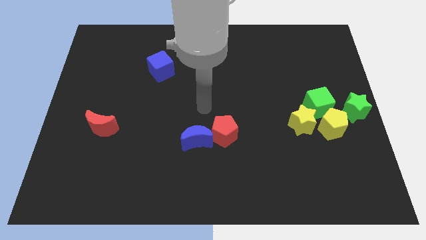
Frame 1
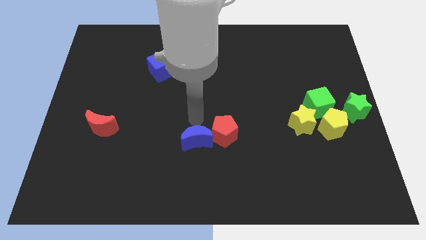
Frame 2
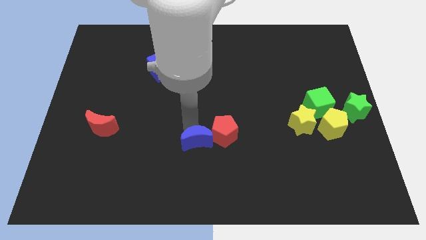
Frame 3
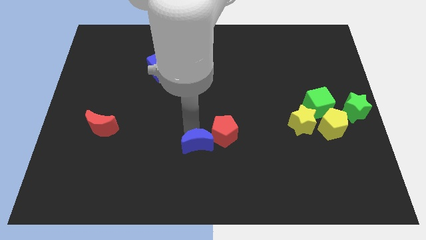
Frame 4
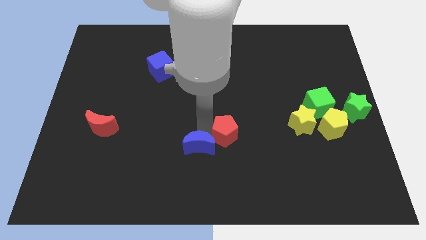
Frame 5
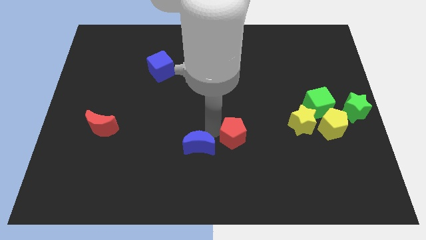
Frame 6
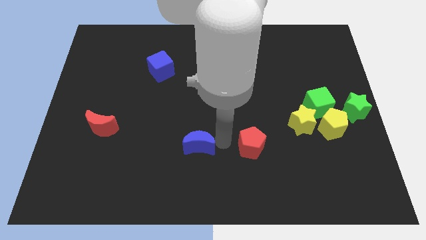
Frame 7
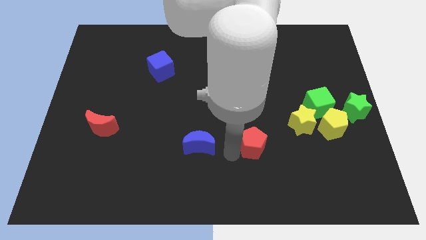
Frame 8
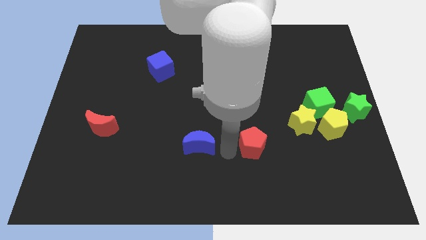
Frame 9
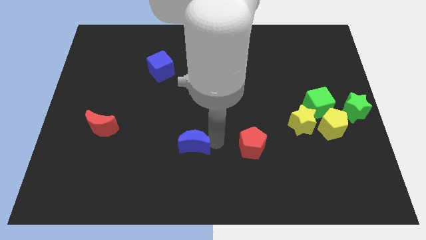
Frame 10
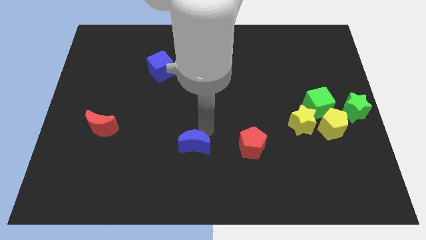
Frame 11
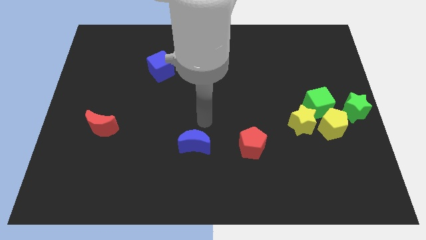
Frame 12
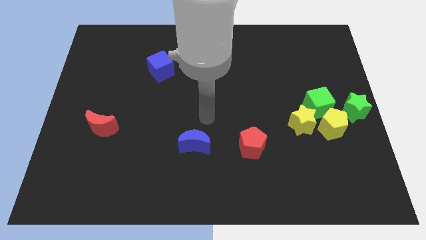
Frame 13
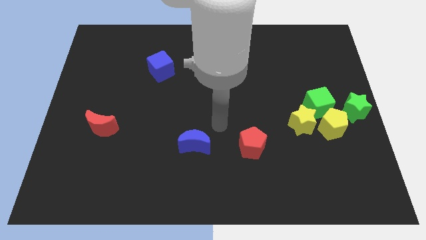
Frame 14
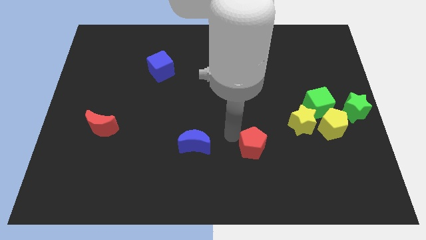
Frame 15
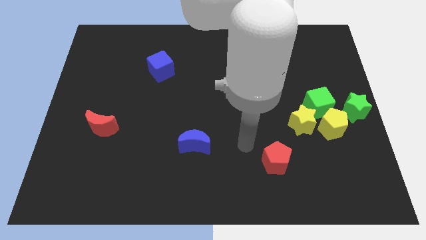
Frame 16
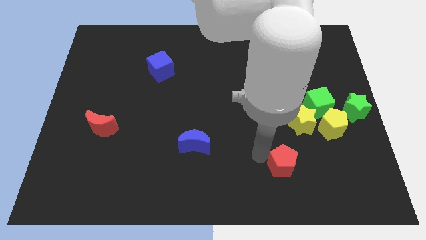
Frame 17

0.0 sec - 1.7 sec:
separate the blue crescent and red pentagon

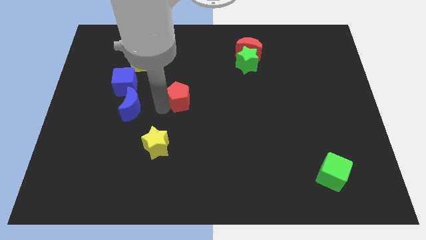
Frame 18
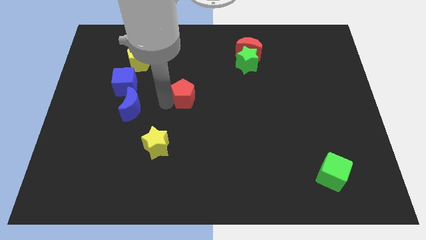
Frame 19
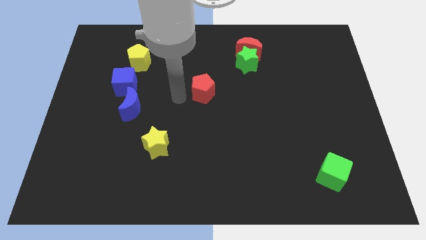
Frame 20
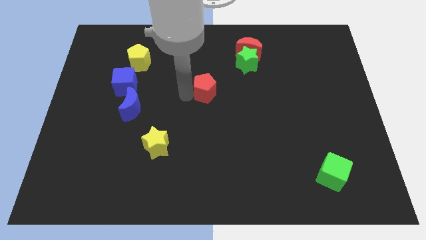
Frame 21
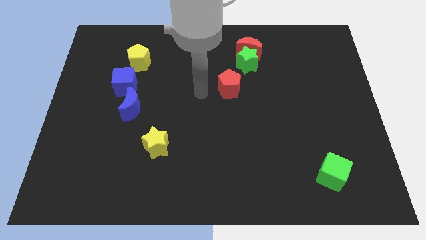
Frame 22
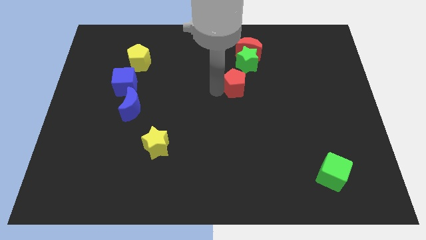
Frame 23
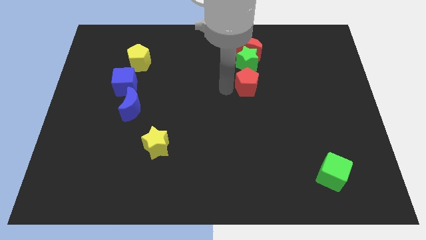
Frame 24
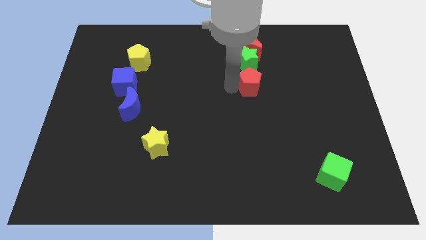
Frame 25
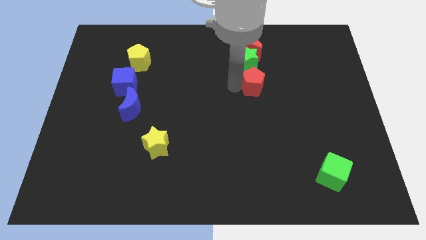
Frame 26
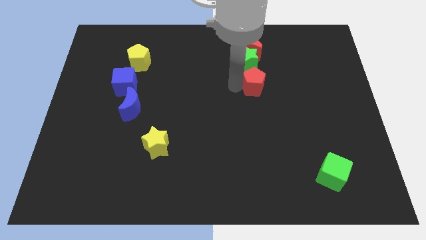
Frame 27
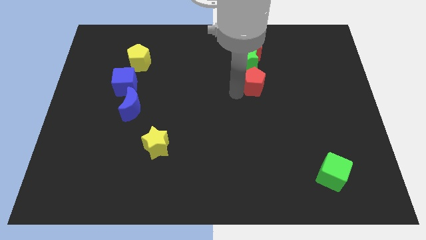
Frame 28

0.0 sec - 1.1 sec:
move red pentagon below green star

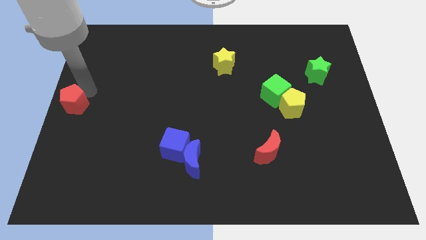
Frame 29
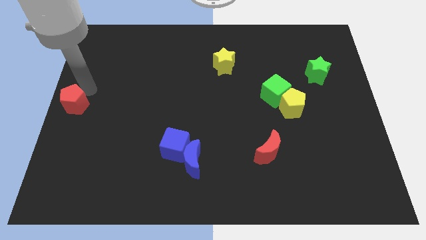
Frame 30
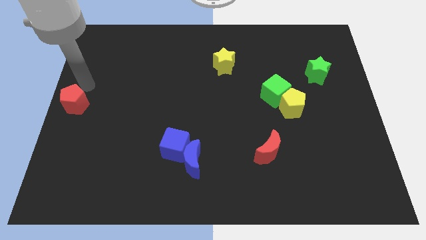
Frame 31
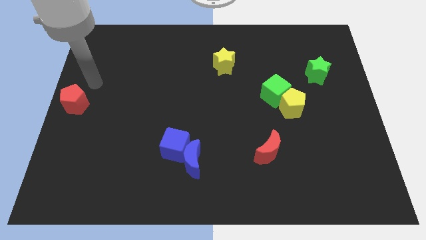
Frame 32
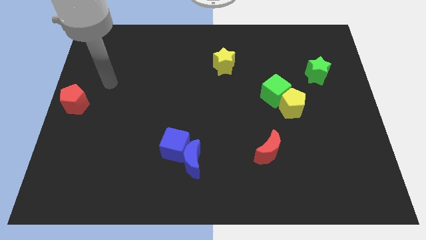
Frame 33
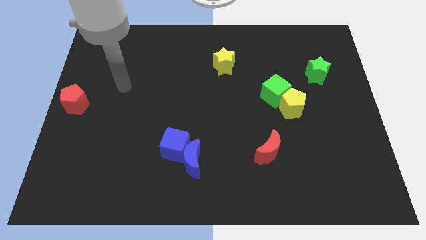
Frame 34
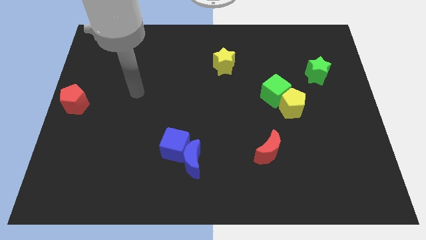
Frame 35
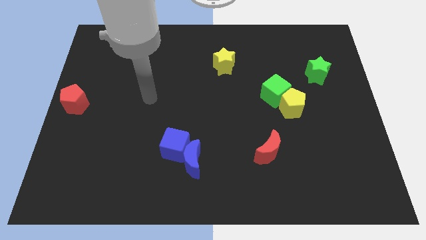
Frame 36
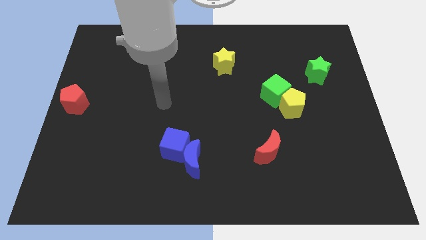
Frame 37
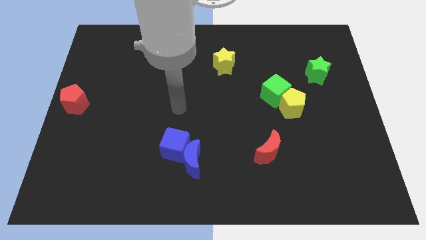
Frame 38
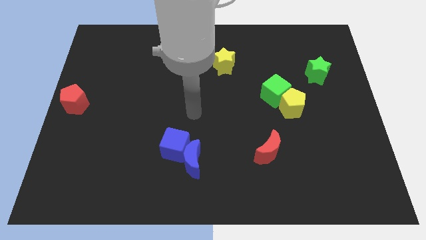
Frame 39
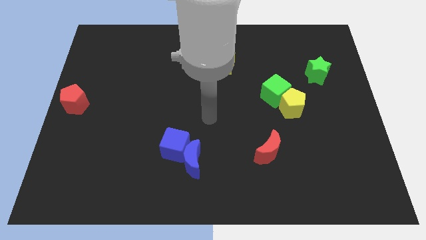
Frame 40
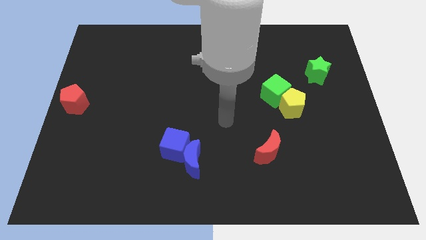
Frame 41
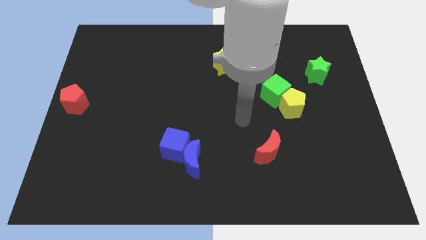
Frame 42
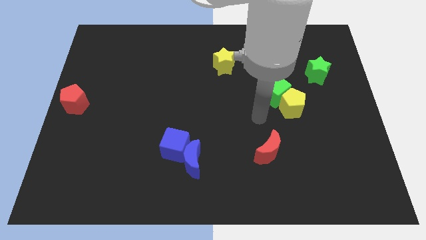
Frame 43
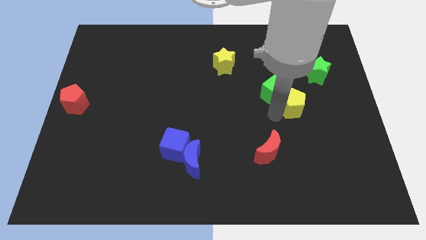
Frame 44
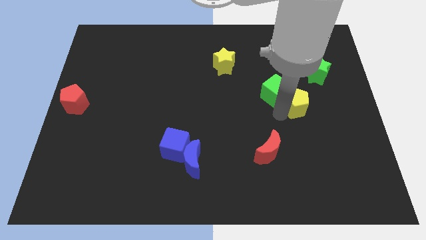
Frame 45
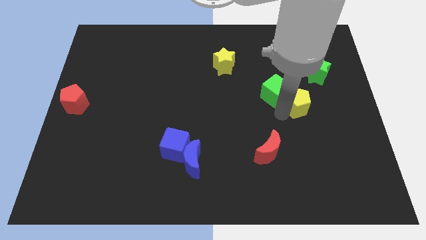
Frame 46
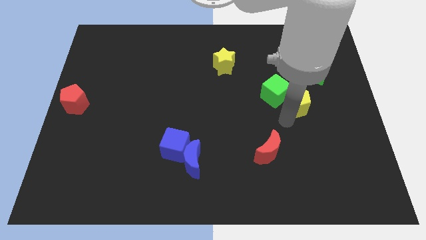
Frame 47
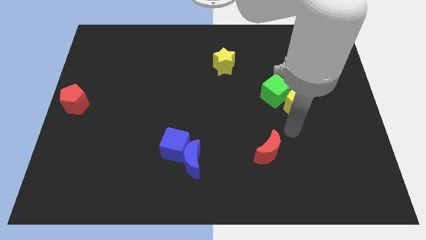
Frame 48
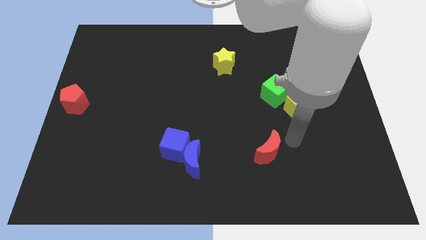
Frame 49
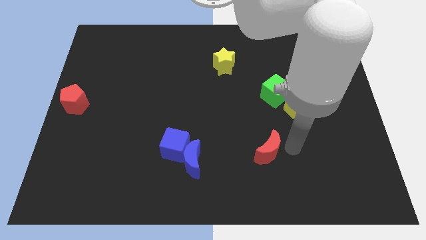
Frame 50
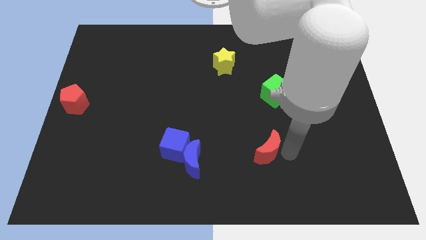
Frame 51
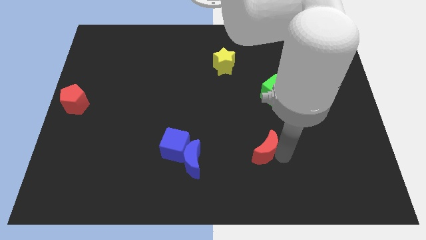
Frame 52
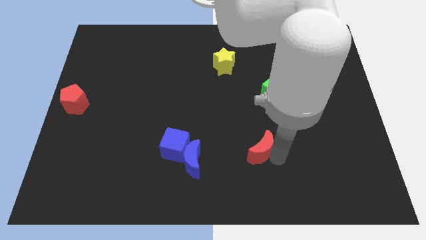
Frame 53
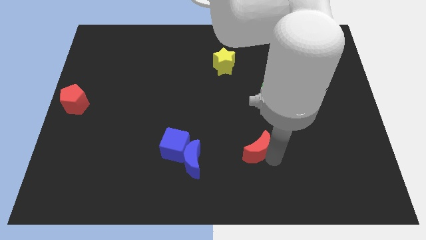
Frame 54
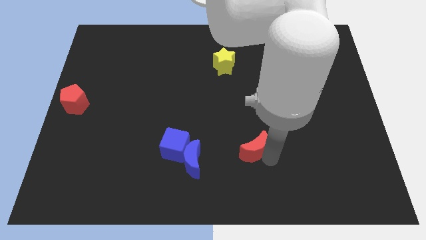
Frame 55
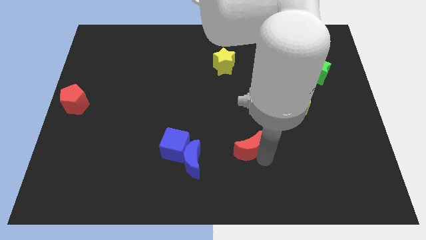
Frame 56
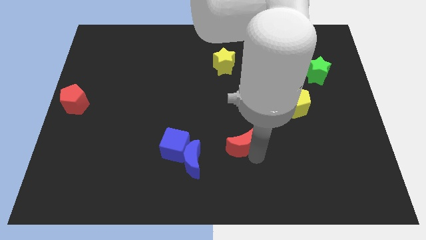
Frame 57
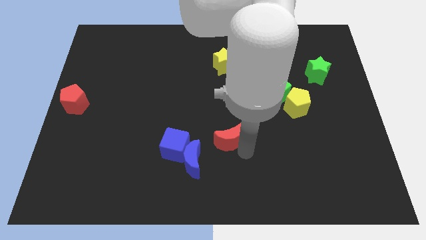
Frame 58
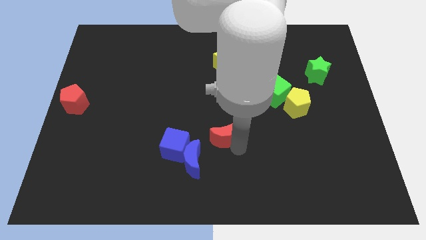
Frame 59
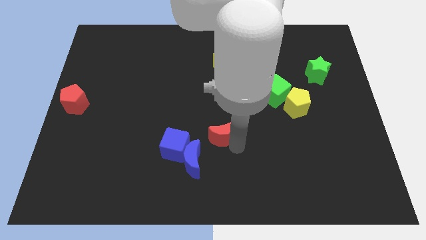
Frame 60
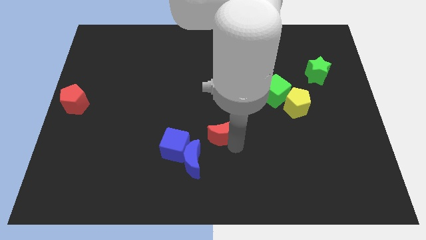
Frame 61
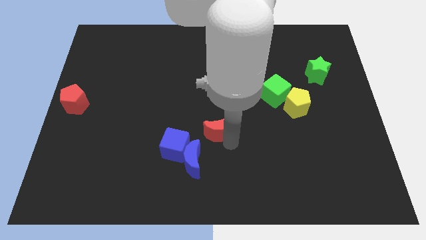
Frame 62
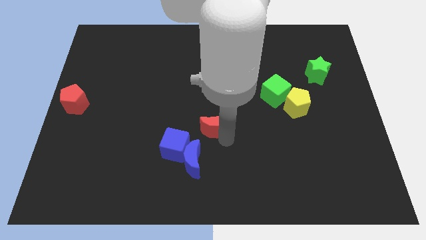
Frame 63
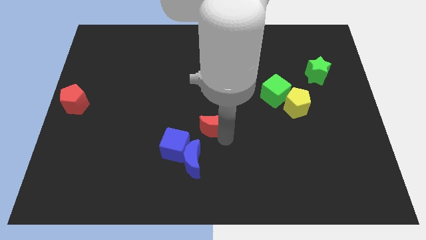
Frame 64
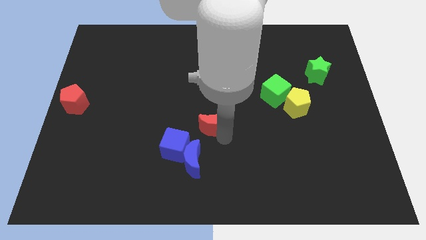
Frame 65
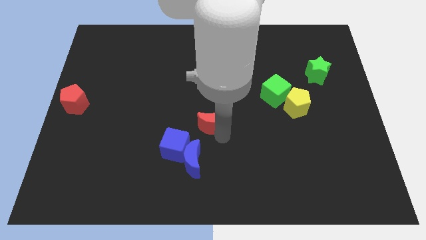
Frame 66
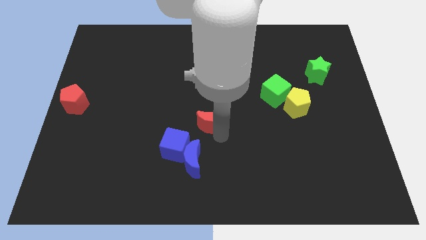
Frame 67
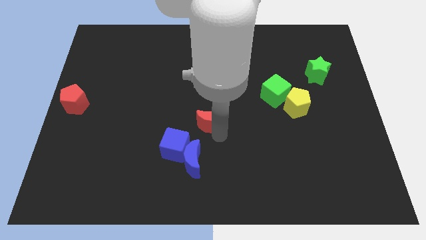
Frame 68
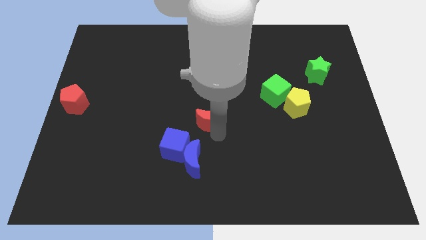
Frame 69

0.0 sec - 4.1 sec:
place the red moon above the blue moon

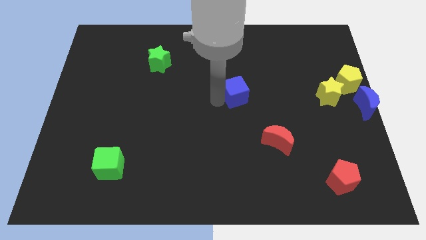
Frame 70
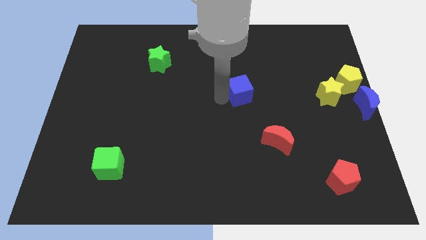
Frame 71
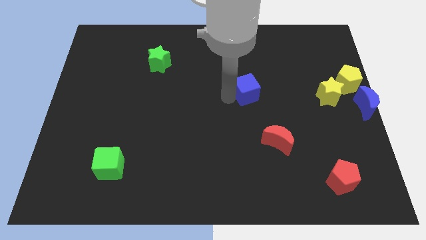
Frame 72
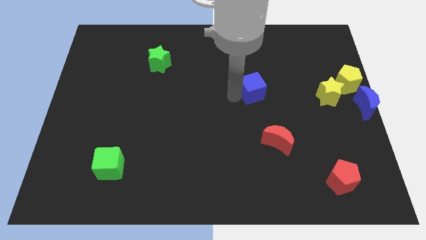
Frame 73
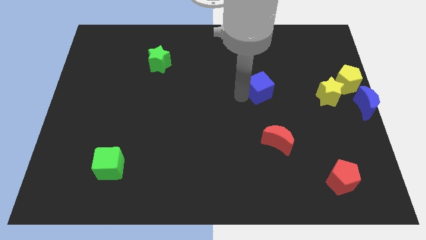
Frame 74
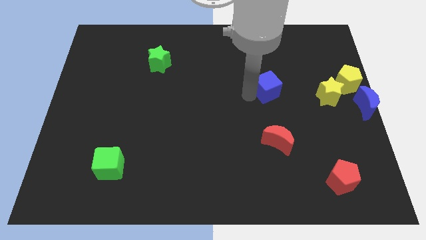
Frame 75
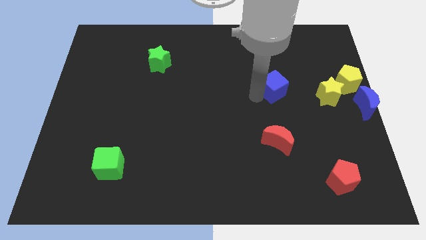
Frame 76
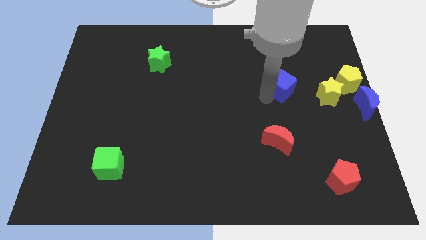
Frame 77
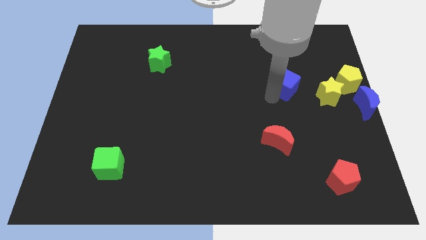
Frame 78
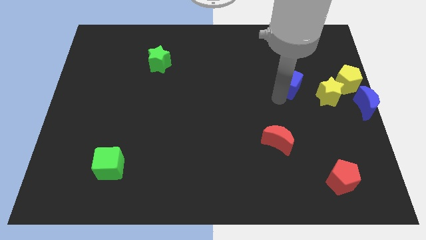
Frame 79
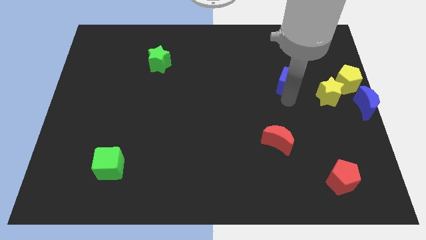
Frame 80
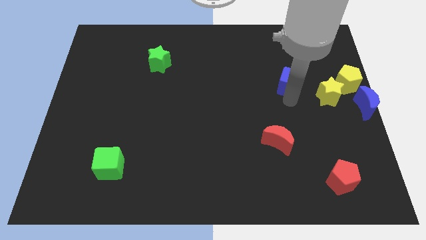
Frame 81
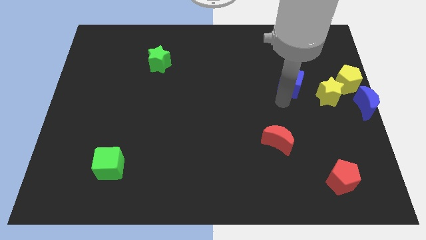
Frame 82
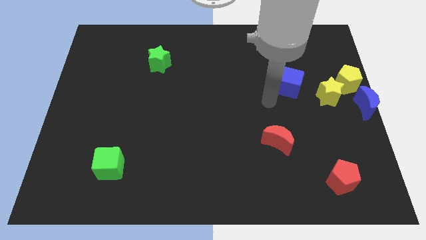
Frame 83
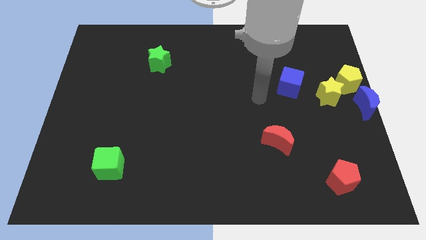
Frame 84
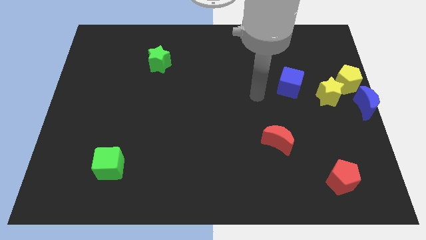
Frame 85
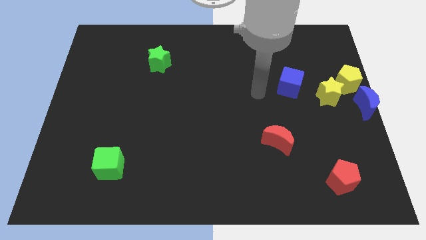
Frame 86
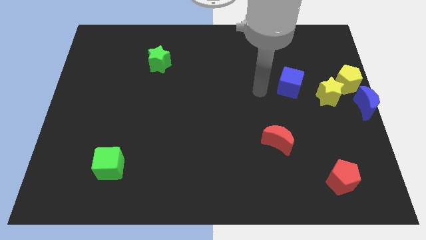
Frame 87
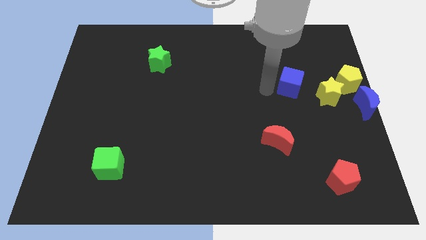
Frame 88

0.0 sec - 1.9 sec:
move the blue cube towards the yellow star

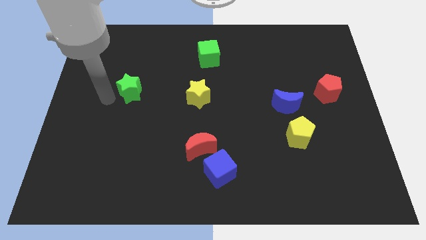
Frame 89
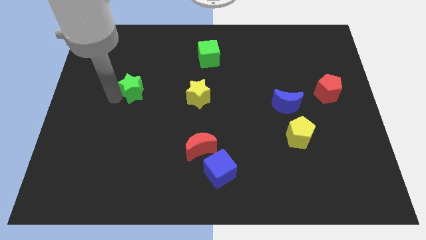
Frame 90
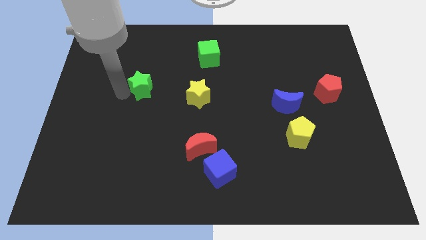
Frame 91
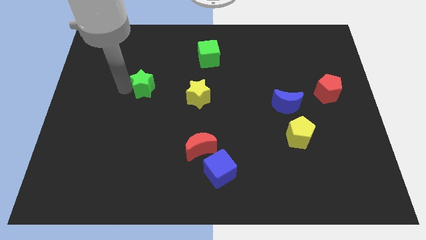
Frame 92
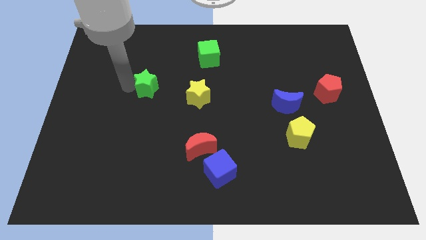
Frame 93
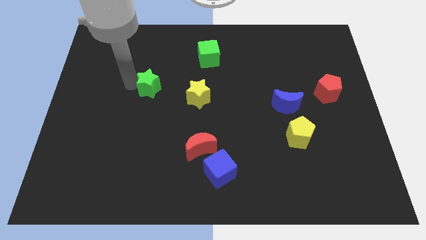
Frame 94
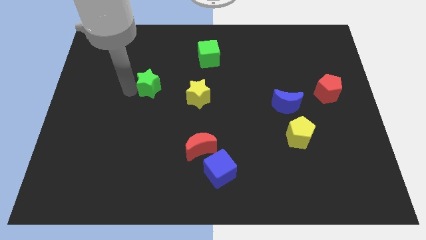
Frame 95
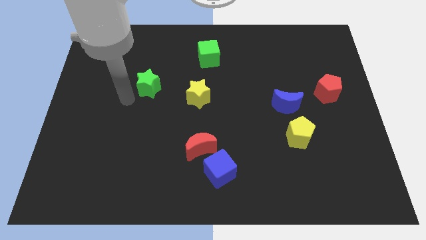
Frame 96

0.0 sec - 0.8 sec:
push the green star to the left of the yellow star
